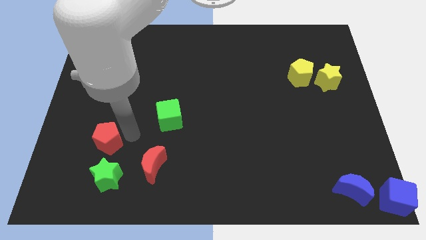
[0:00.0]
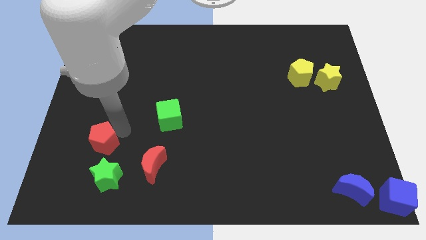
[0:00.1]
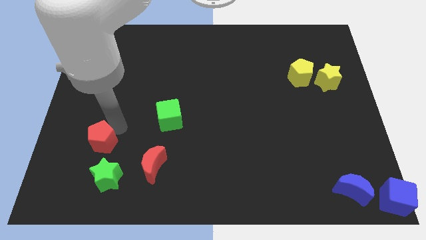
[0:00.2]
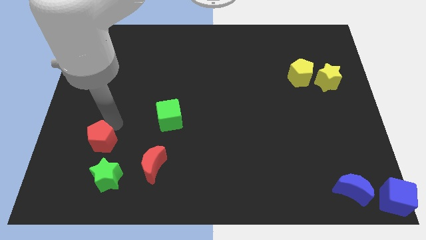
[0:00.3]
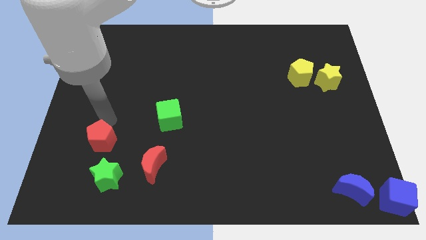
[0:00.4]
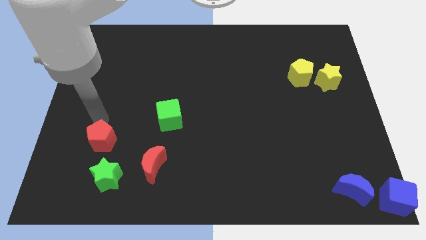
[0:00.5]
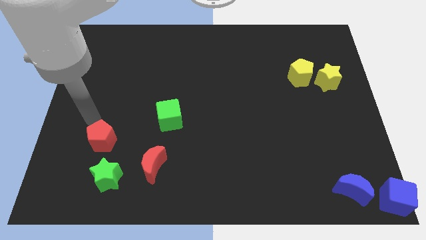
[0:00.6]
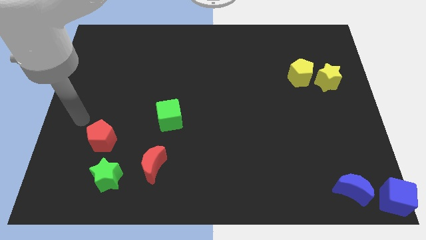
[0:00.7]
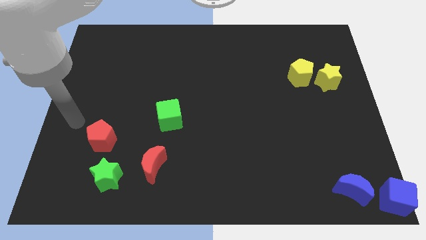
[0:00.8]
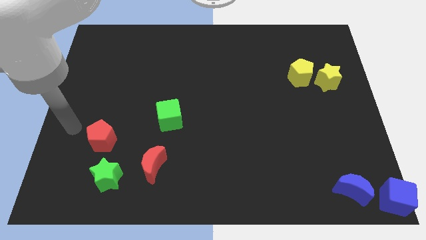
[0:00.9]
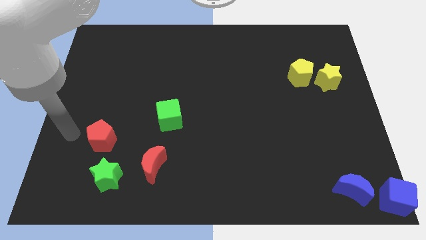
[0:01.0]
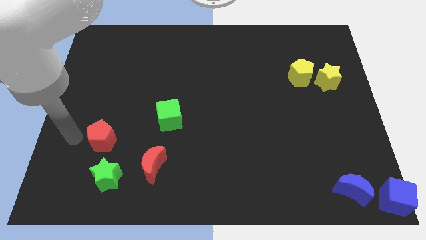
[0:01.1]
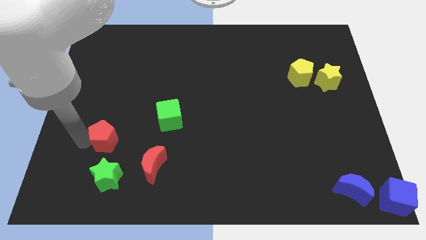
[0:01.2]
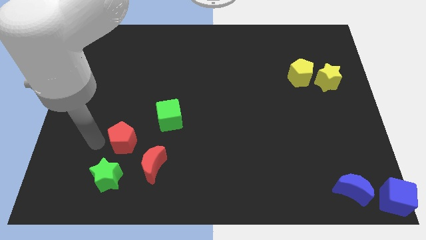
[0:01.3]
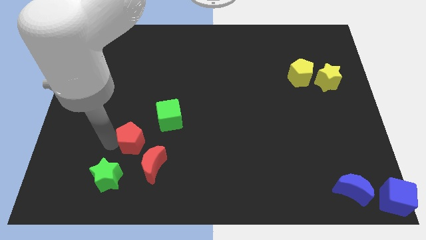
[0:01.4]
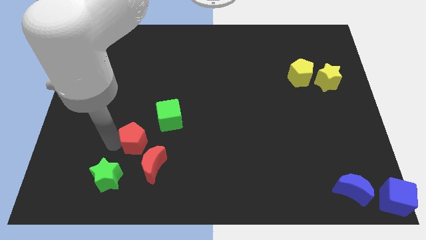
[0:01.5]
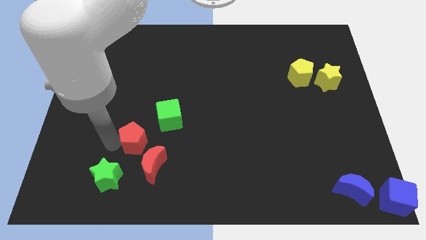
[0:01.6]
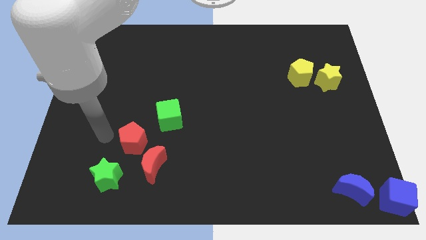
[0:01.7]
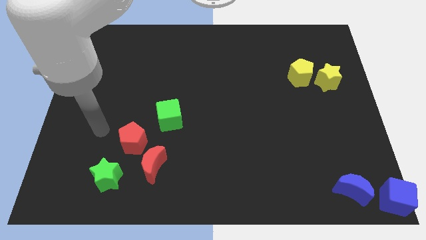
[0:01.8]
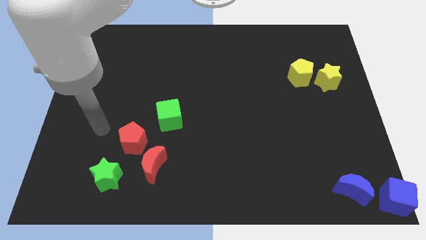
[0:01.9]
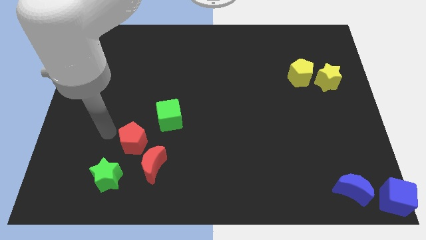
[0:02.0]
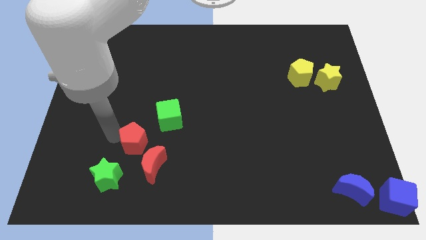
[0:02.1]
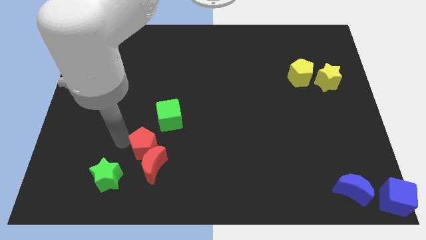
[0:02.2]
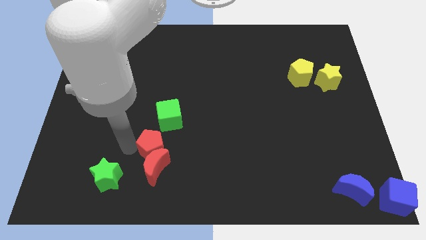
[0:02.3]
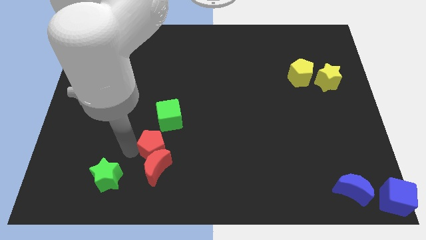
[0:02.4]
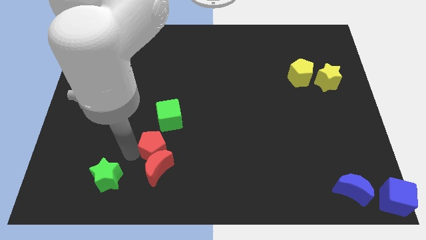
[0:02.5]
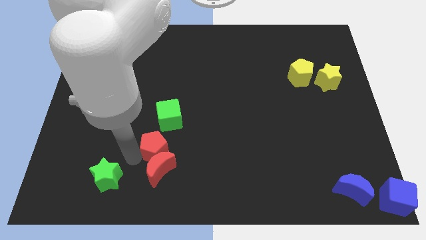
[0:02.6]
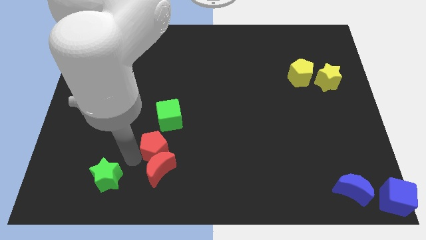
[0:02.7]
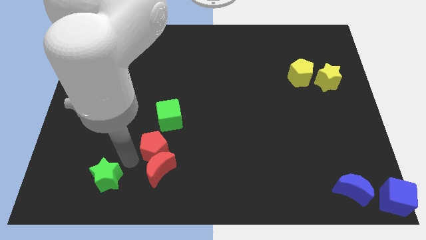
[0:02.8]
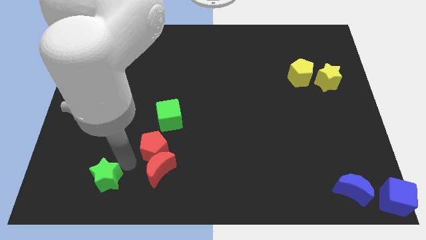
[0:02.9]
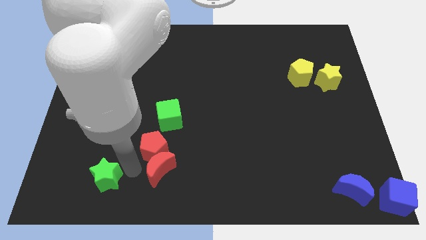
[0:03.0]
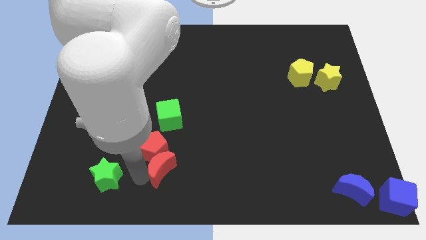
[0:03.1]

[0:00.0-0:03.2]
move red pentagon into red crescent

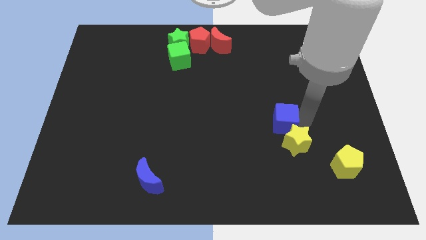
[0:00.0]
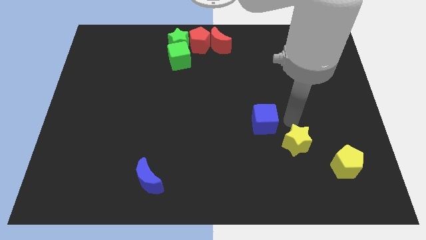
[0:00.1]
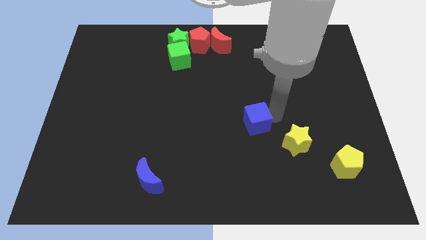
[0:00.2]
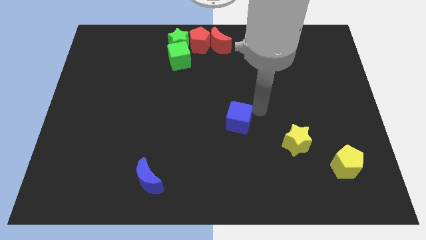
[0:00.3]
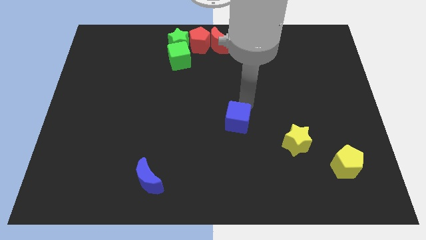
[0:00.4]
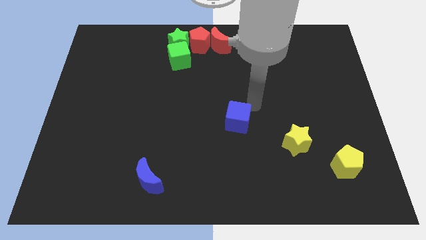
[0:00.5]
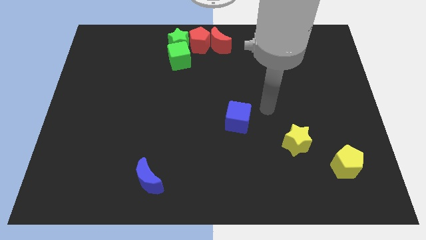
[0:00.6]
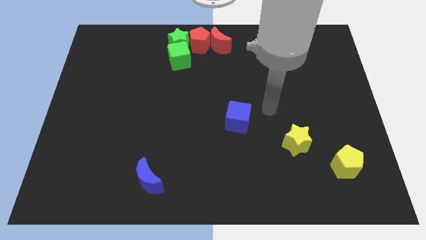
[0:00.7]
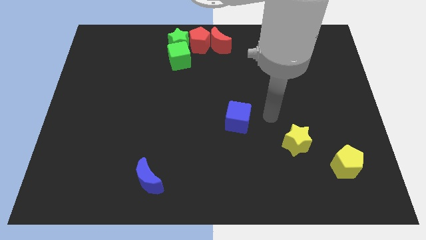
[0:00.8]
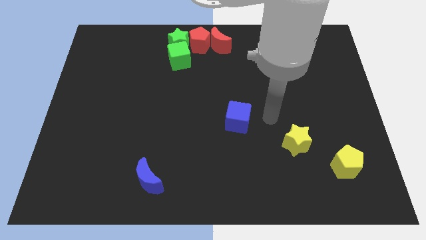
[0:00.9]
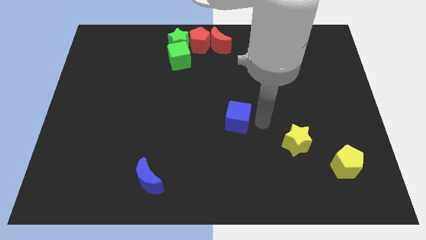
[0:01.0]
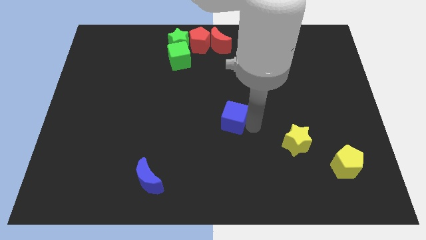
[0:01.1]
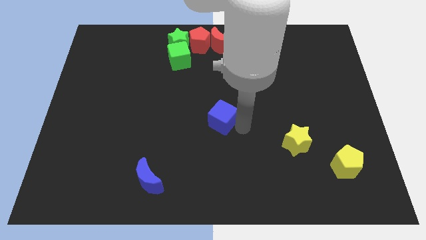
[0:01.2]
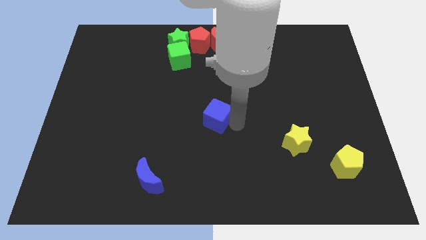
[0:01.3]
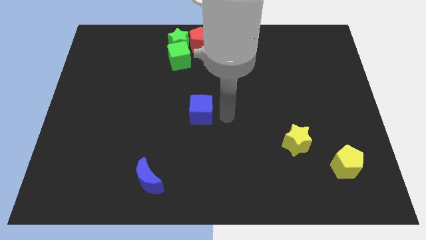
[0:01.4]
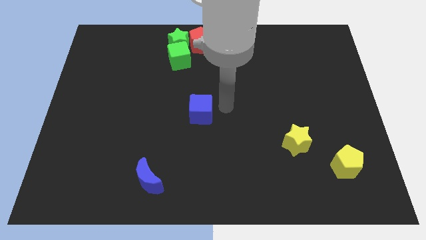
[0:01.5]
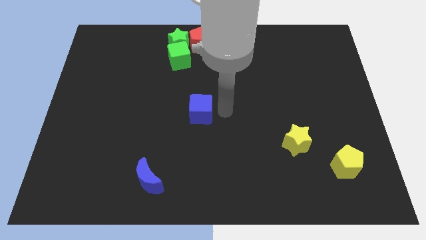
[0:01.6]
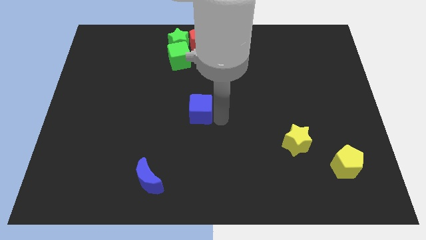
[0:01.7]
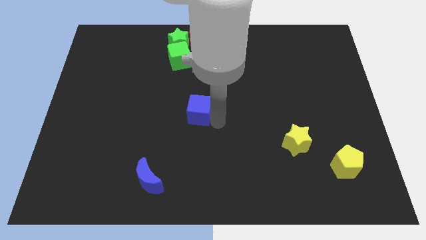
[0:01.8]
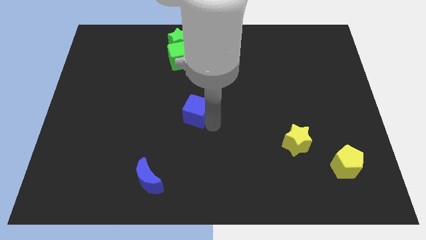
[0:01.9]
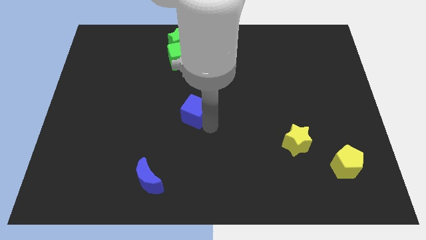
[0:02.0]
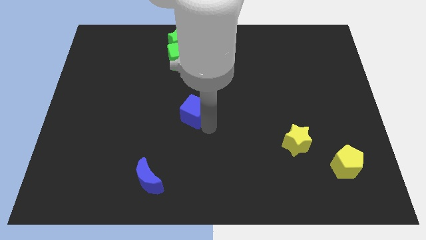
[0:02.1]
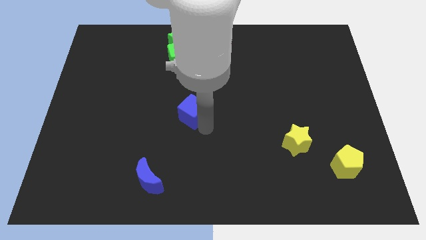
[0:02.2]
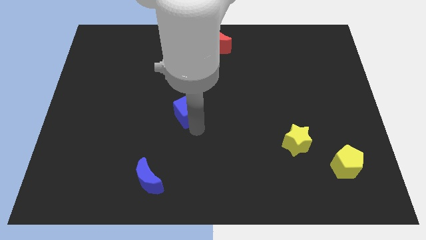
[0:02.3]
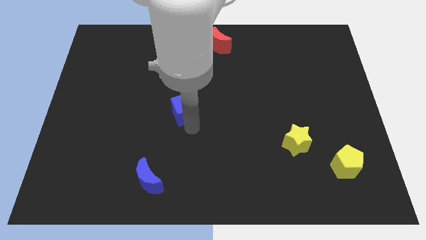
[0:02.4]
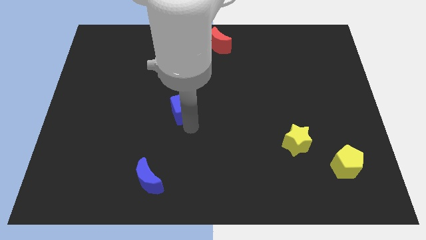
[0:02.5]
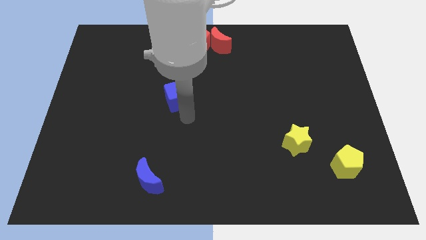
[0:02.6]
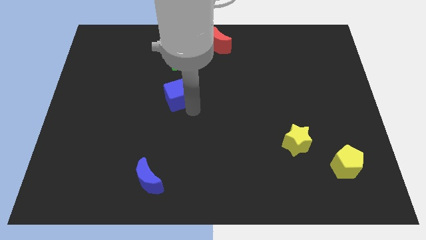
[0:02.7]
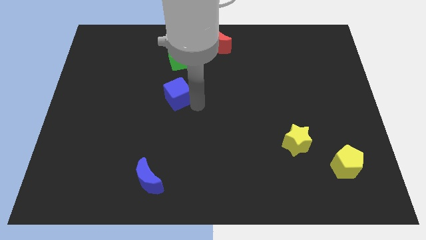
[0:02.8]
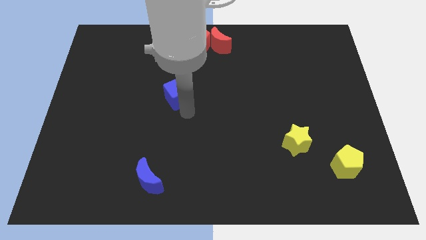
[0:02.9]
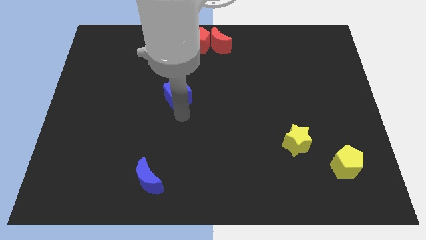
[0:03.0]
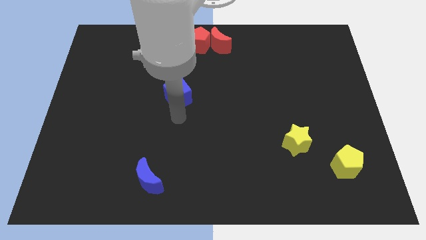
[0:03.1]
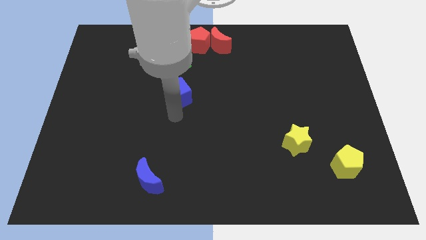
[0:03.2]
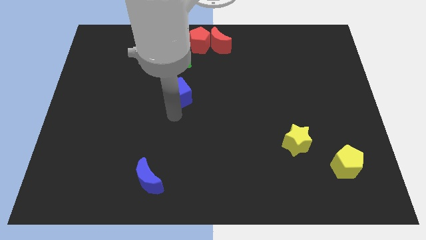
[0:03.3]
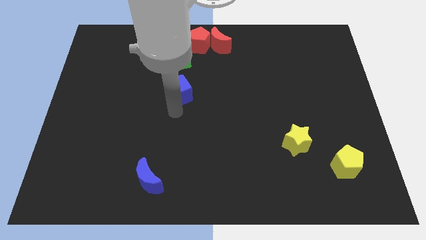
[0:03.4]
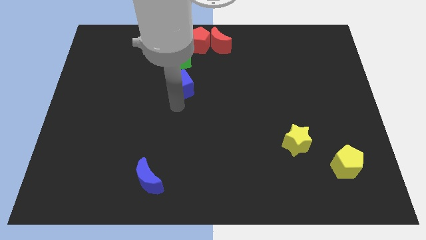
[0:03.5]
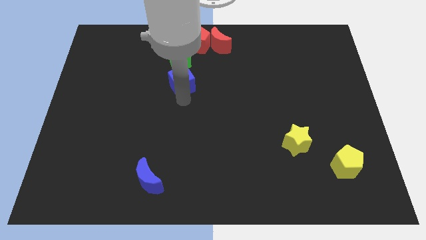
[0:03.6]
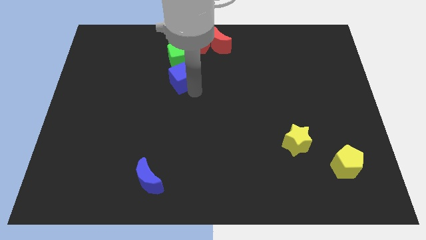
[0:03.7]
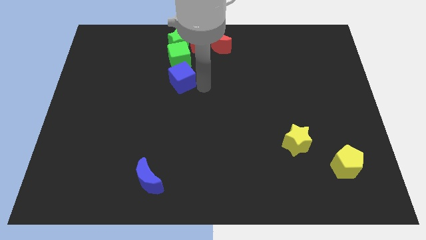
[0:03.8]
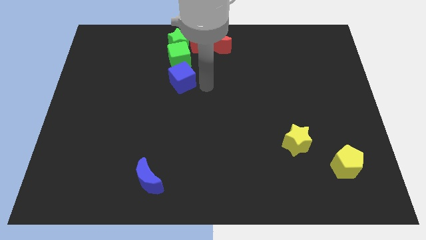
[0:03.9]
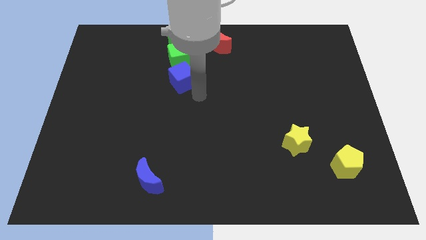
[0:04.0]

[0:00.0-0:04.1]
push blue cube towards green cube

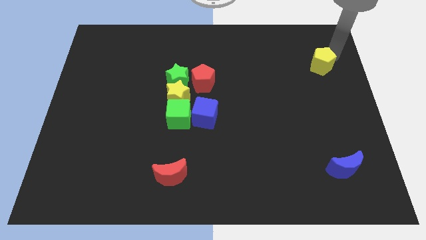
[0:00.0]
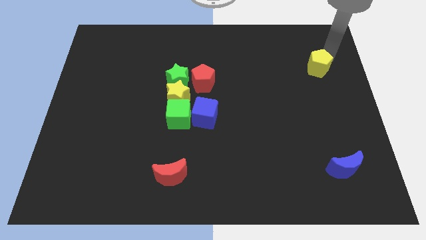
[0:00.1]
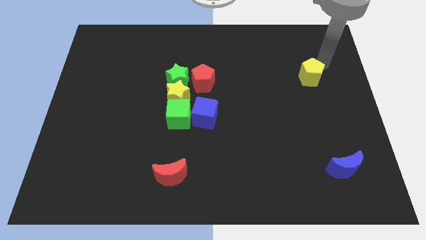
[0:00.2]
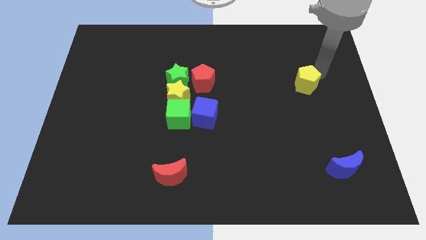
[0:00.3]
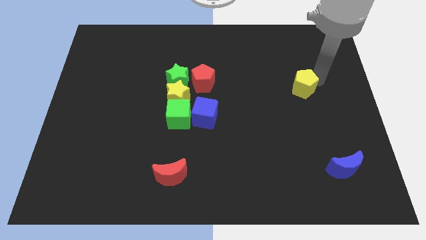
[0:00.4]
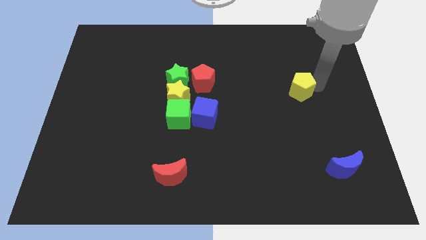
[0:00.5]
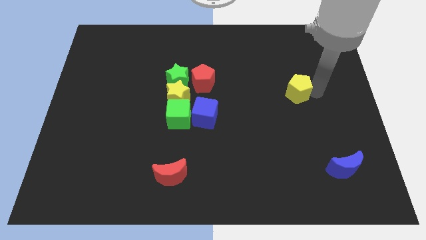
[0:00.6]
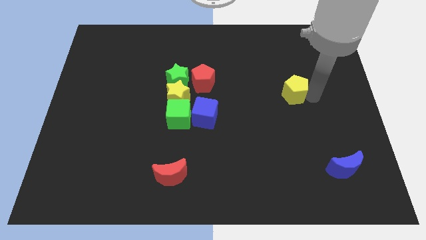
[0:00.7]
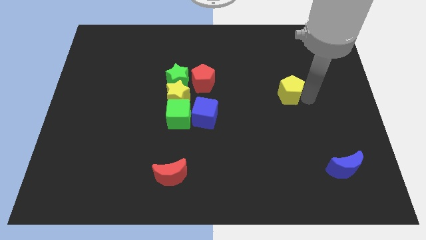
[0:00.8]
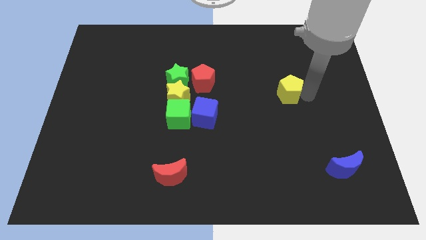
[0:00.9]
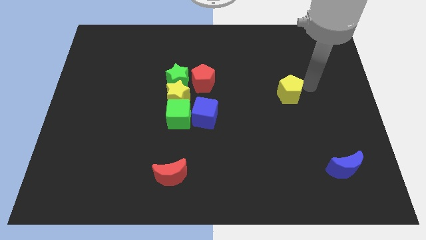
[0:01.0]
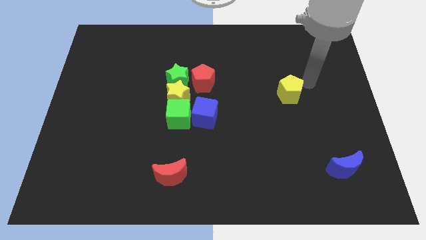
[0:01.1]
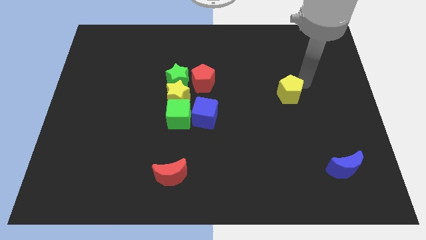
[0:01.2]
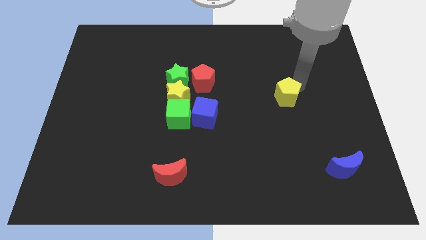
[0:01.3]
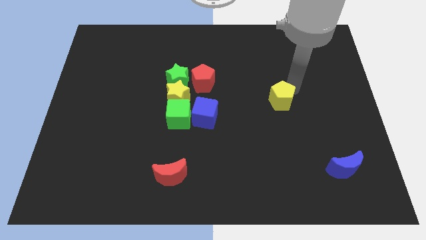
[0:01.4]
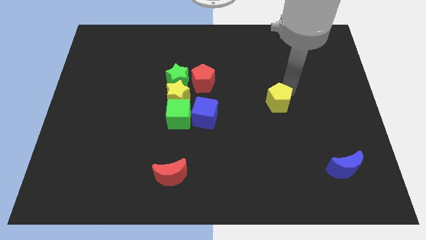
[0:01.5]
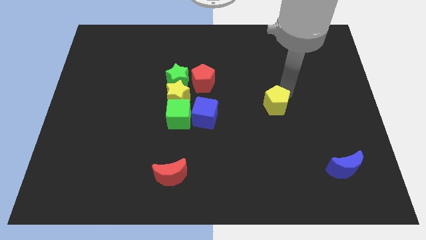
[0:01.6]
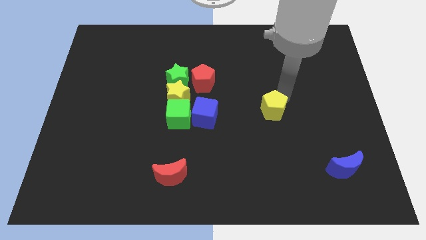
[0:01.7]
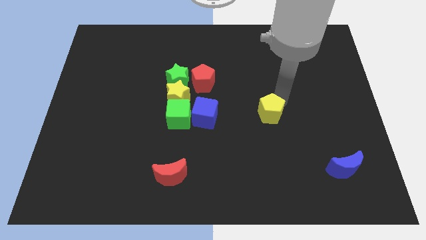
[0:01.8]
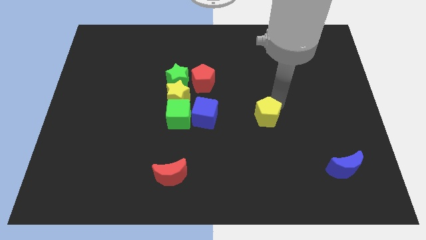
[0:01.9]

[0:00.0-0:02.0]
move the yellow pentagon to the right of the blue cube
